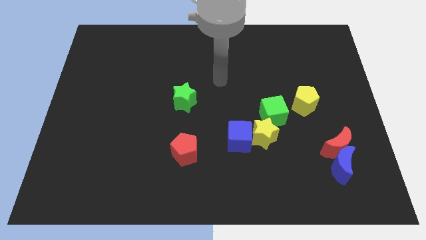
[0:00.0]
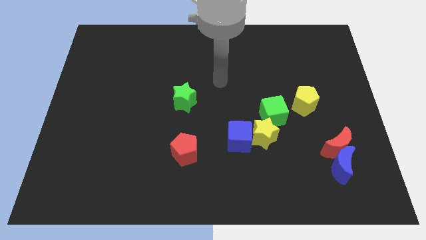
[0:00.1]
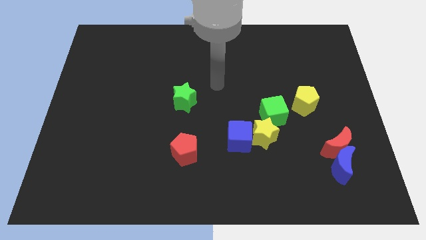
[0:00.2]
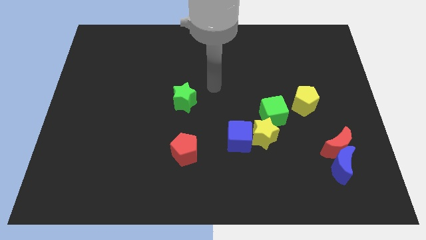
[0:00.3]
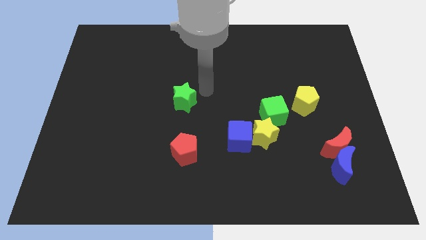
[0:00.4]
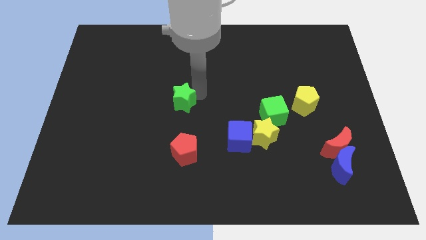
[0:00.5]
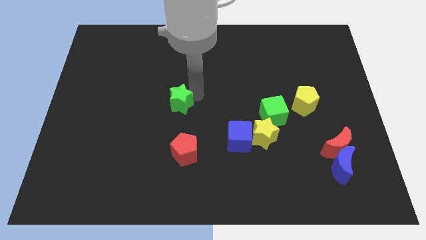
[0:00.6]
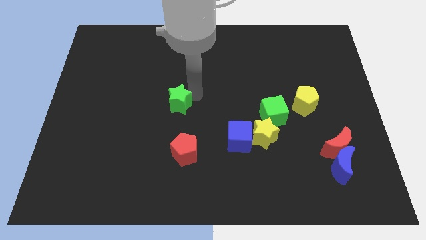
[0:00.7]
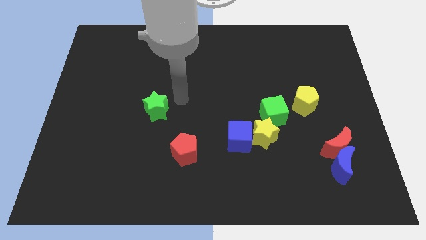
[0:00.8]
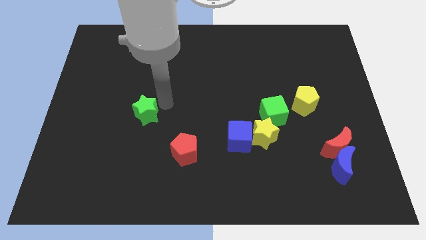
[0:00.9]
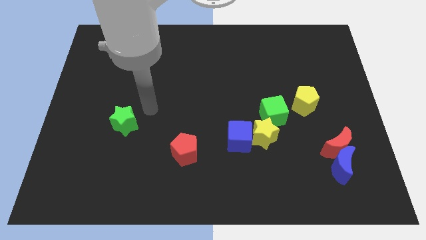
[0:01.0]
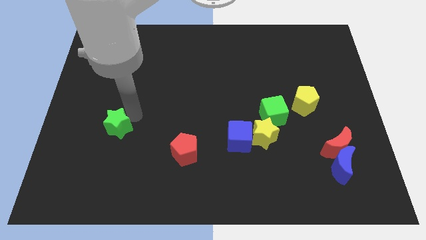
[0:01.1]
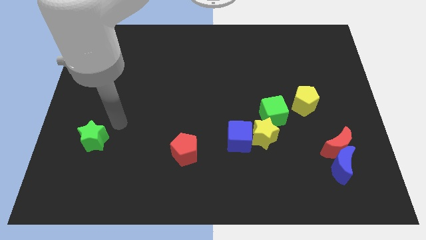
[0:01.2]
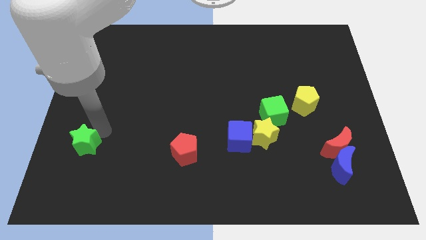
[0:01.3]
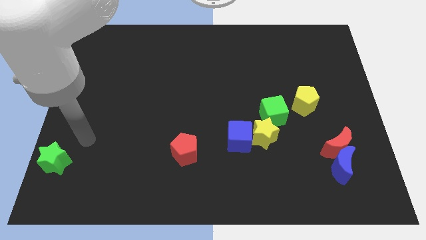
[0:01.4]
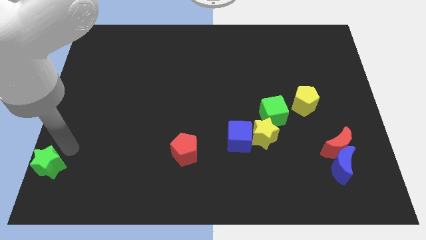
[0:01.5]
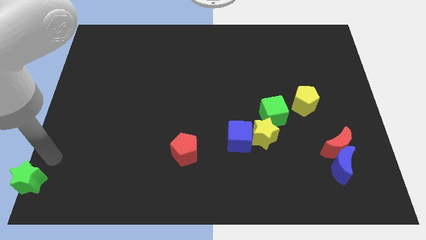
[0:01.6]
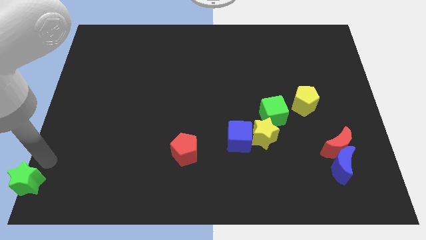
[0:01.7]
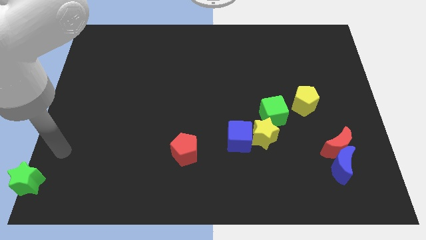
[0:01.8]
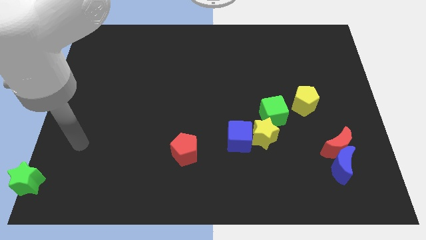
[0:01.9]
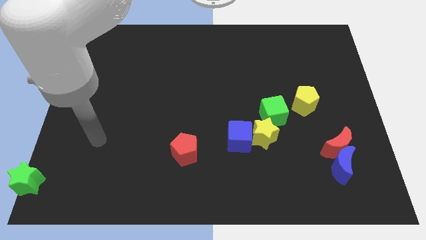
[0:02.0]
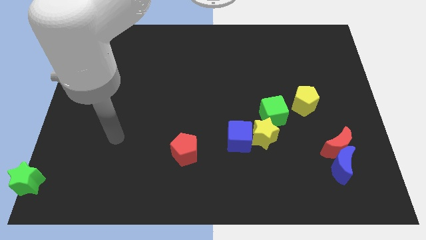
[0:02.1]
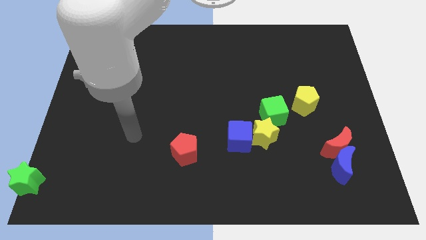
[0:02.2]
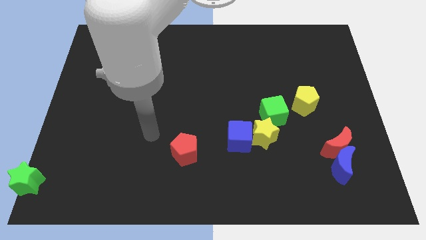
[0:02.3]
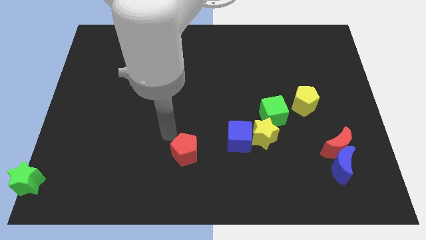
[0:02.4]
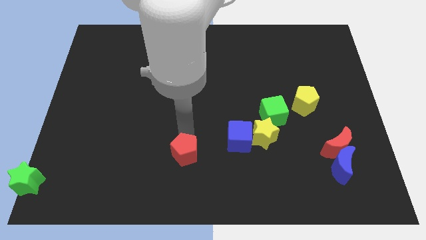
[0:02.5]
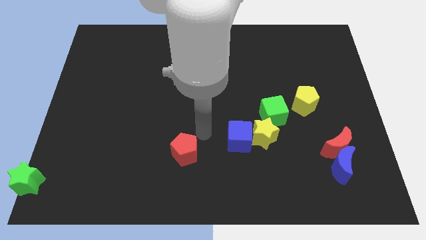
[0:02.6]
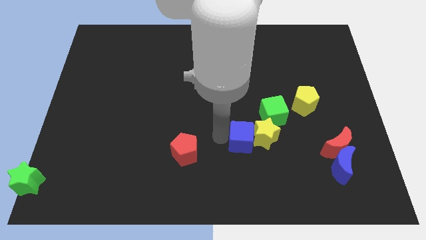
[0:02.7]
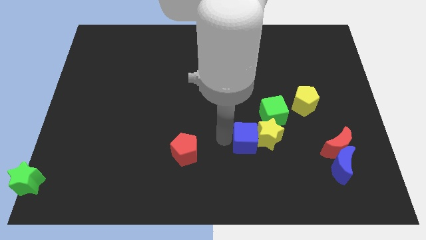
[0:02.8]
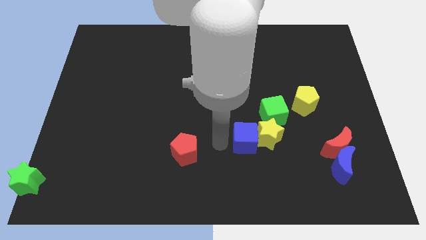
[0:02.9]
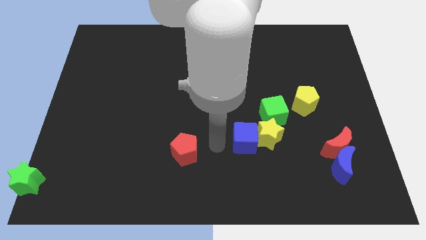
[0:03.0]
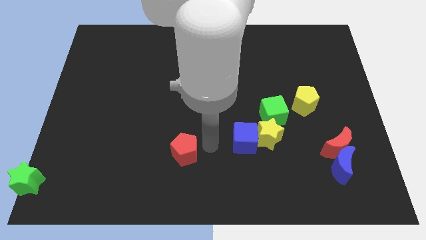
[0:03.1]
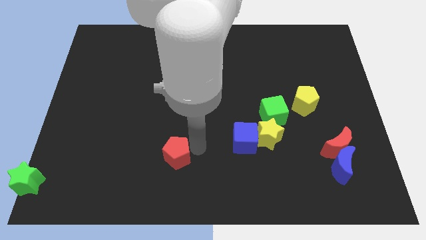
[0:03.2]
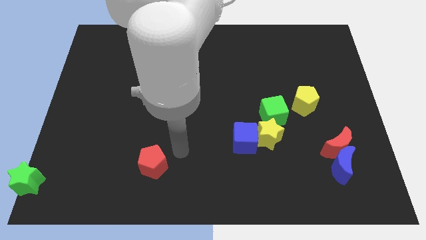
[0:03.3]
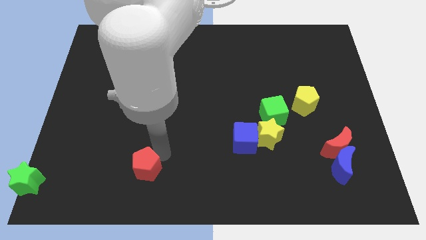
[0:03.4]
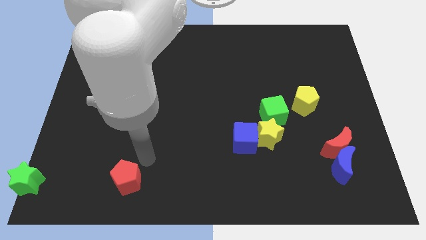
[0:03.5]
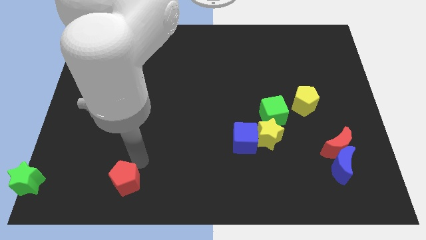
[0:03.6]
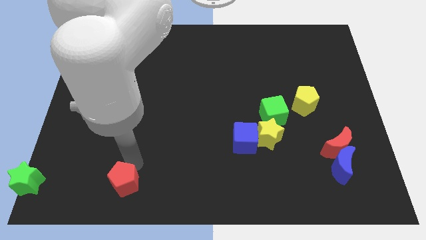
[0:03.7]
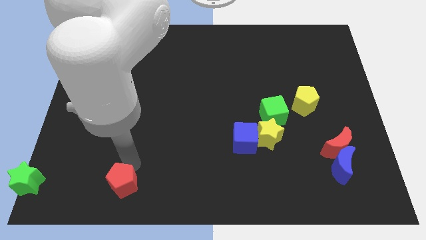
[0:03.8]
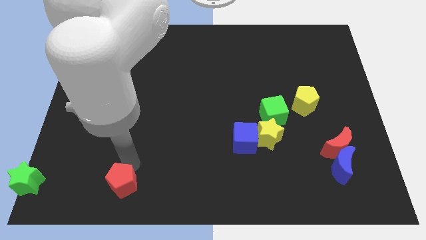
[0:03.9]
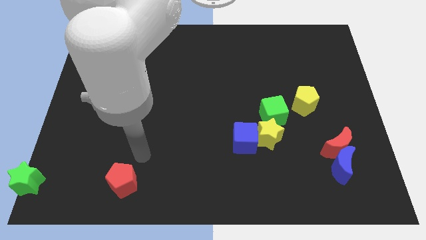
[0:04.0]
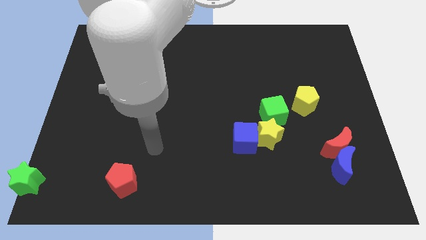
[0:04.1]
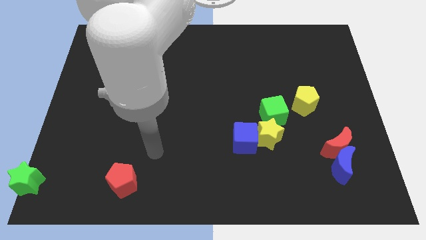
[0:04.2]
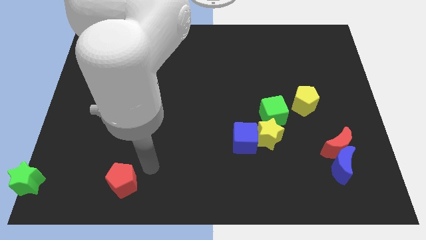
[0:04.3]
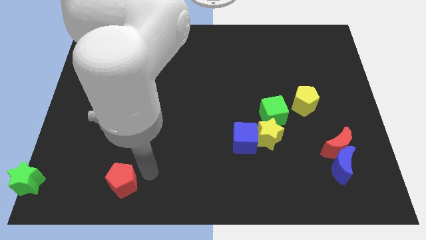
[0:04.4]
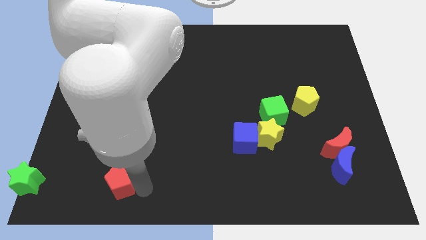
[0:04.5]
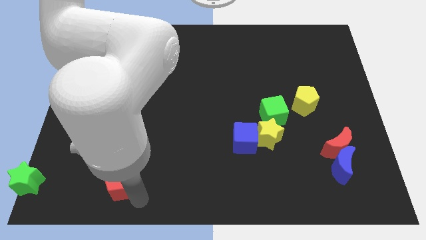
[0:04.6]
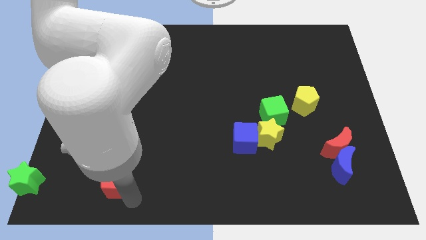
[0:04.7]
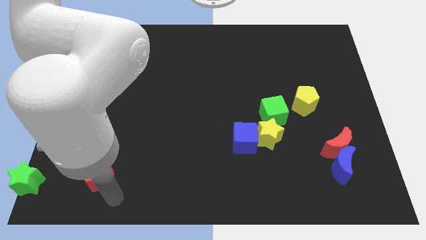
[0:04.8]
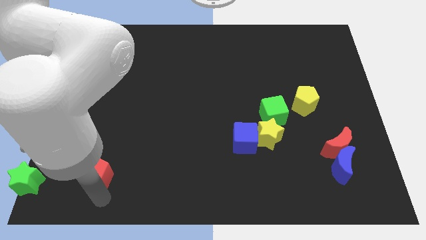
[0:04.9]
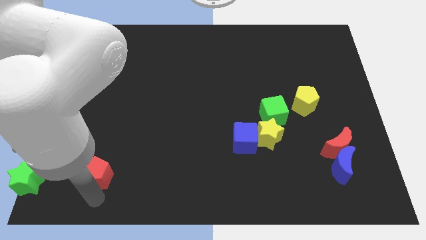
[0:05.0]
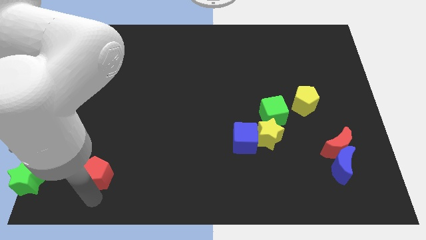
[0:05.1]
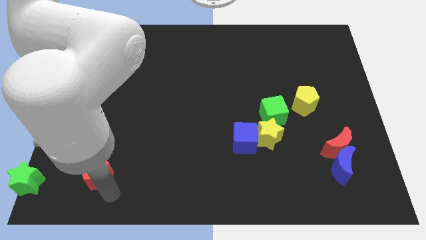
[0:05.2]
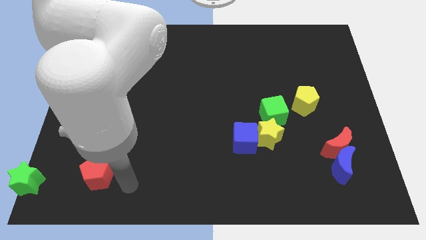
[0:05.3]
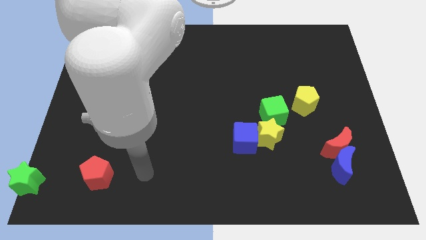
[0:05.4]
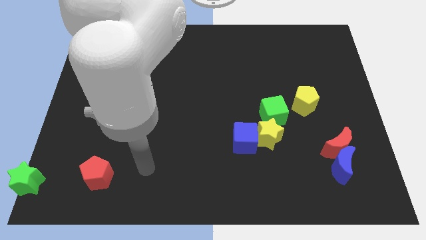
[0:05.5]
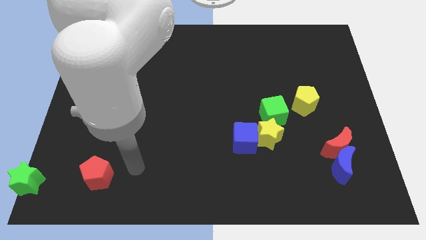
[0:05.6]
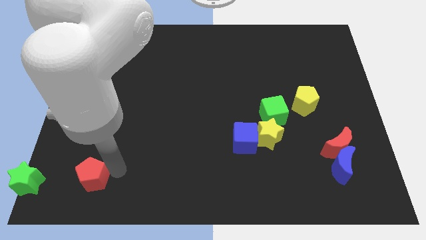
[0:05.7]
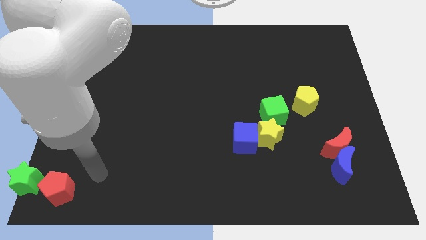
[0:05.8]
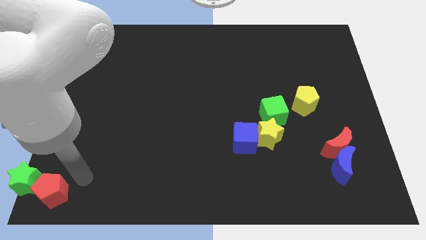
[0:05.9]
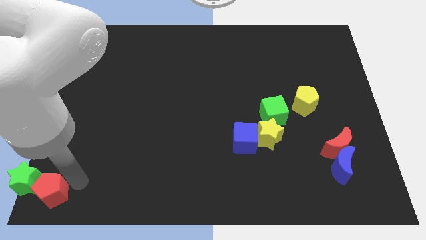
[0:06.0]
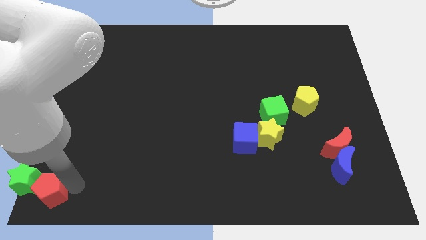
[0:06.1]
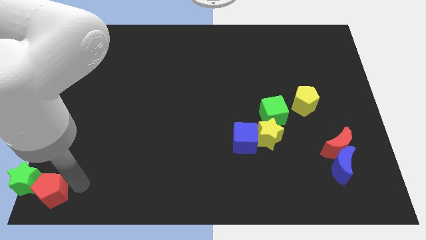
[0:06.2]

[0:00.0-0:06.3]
place green star and red pentagon at the bottom left corner of the board

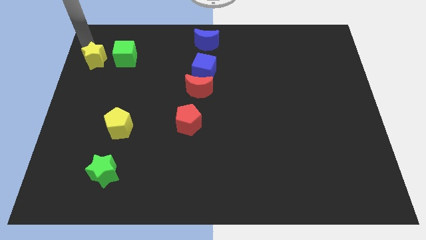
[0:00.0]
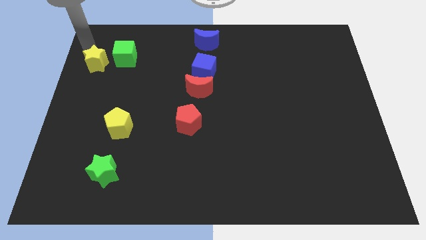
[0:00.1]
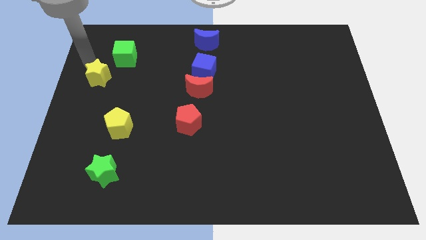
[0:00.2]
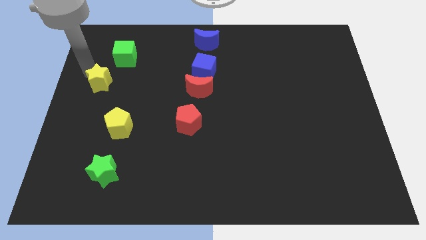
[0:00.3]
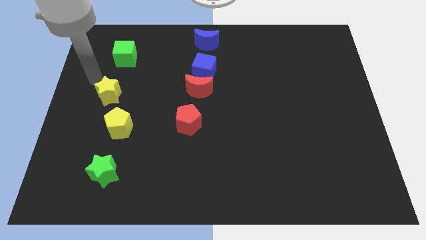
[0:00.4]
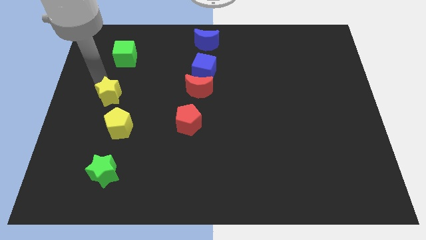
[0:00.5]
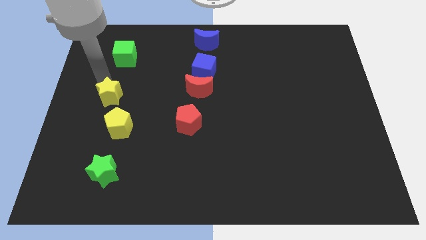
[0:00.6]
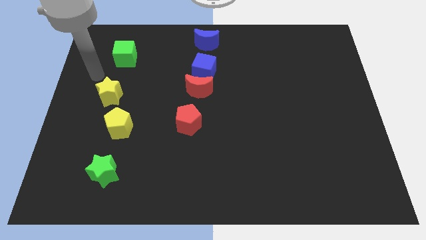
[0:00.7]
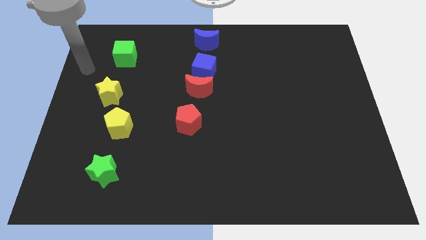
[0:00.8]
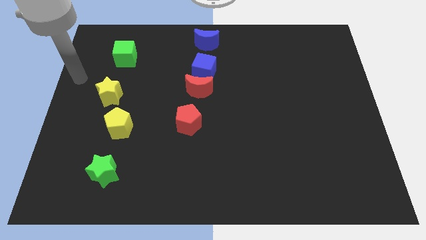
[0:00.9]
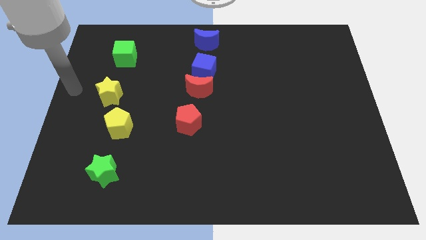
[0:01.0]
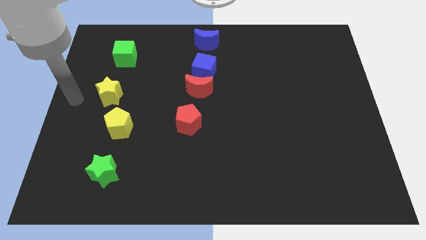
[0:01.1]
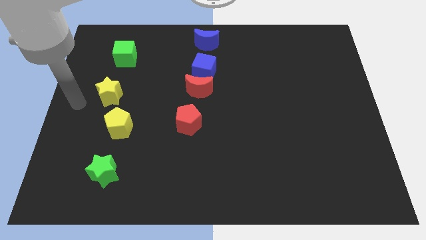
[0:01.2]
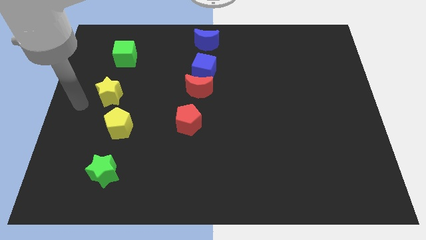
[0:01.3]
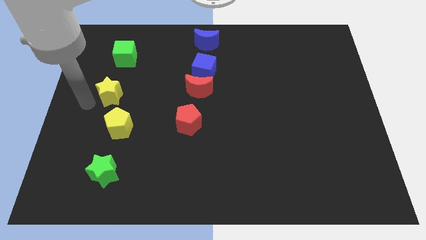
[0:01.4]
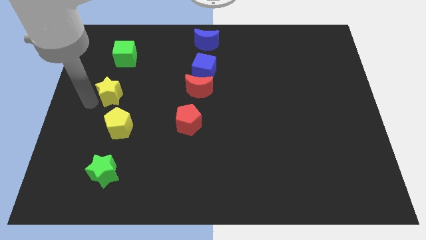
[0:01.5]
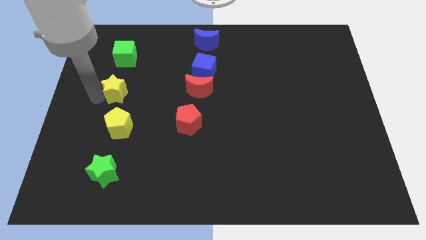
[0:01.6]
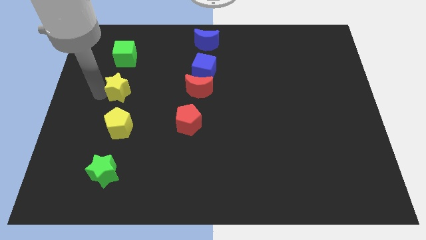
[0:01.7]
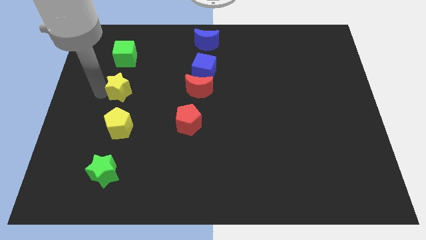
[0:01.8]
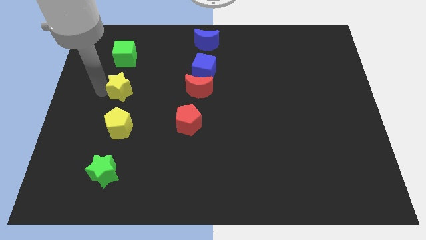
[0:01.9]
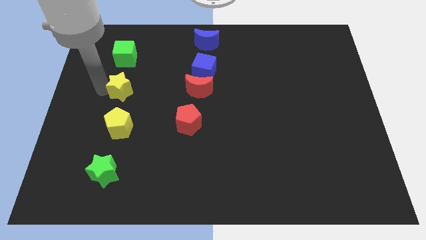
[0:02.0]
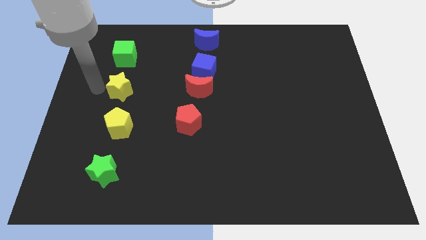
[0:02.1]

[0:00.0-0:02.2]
move the yellow star in between the green cube and yellow pentagon

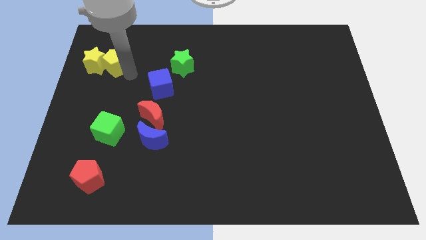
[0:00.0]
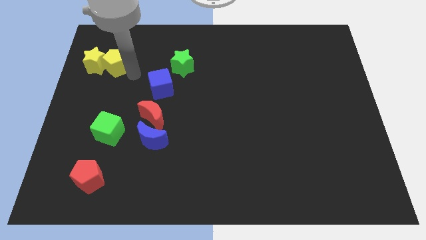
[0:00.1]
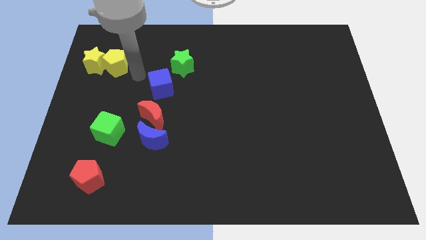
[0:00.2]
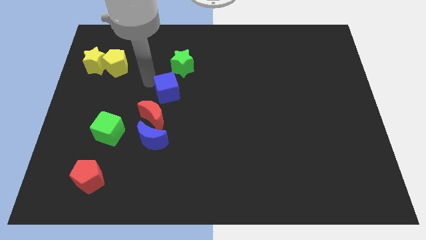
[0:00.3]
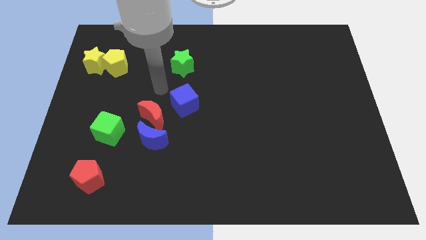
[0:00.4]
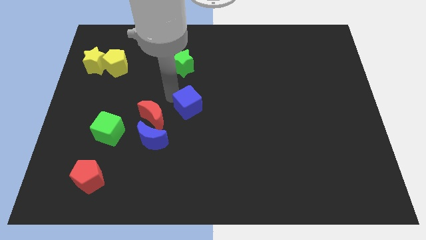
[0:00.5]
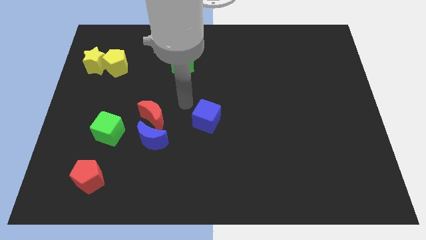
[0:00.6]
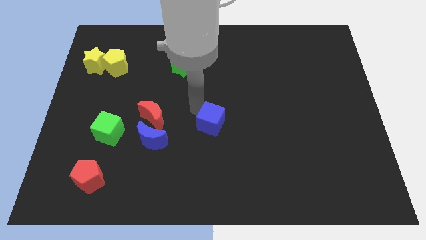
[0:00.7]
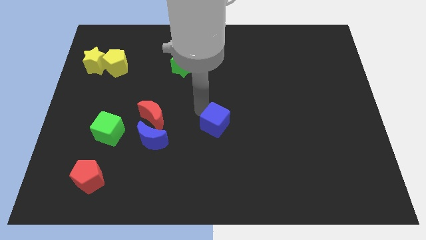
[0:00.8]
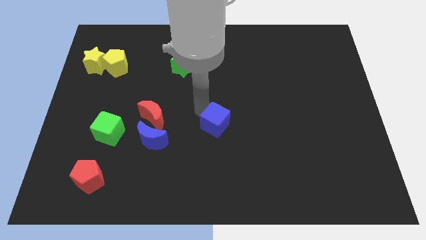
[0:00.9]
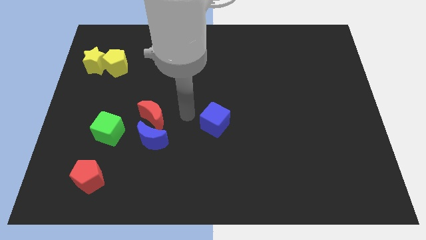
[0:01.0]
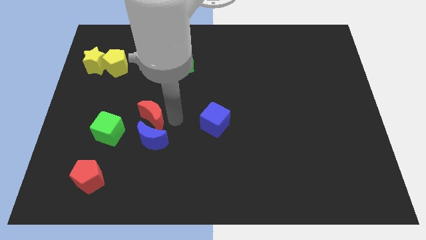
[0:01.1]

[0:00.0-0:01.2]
move the blue cube to the center of the board
